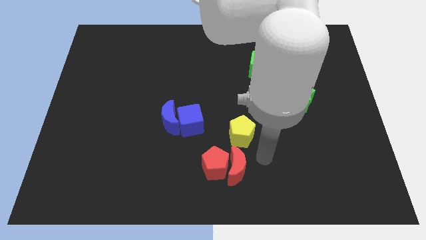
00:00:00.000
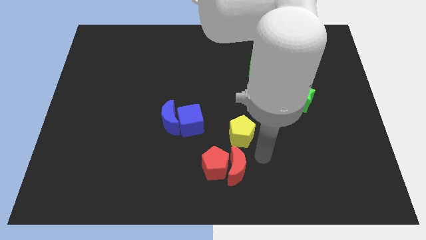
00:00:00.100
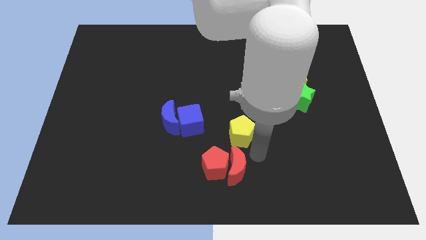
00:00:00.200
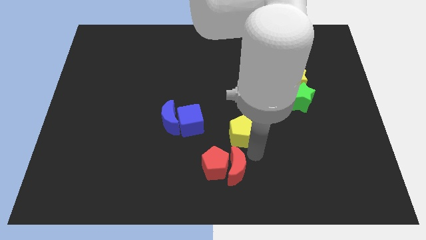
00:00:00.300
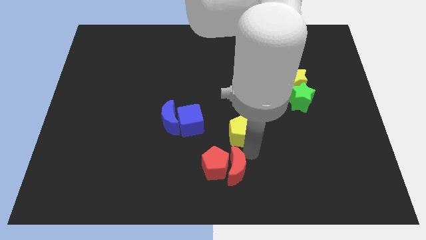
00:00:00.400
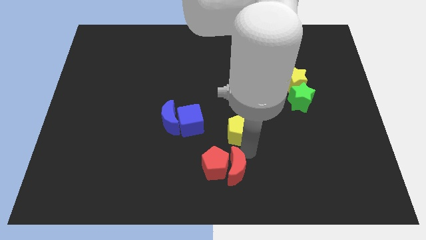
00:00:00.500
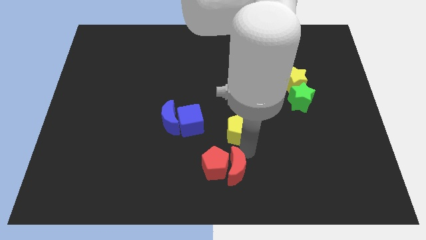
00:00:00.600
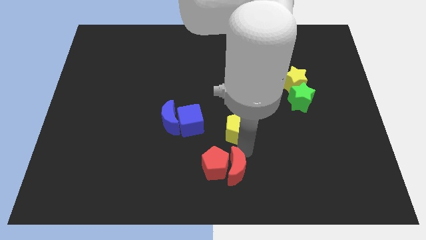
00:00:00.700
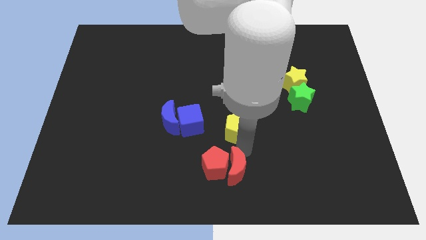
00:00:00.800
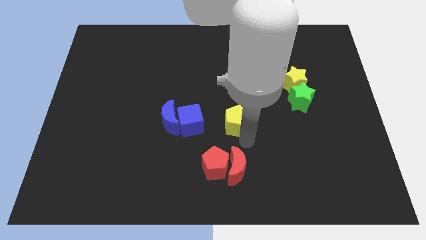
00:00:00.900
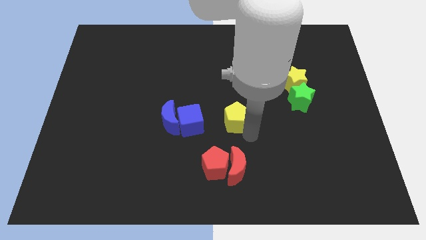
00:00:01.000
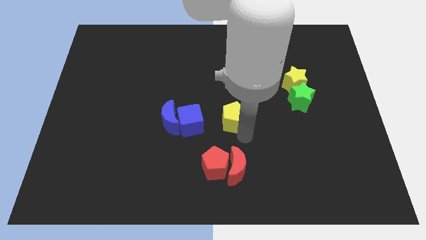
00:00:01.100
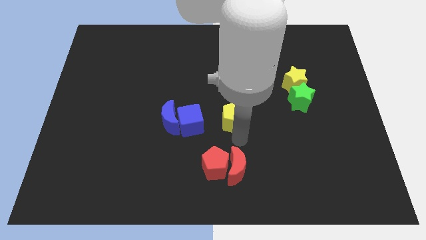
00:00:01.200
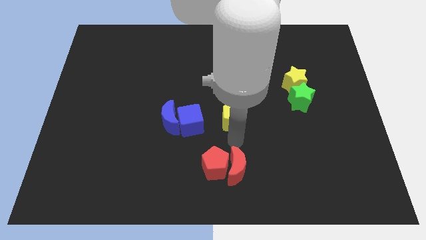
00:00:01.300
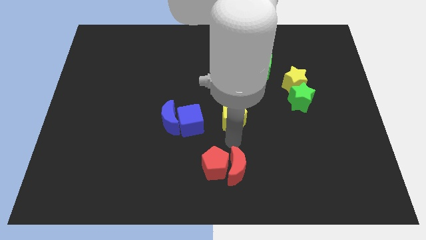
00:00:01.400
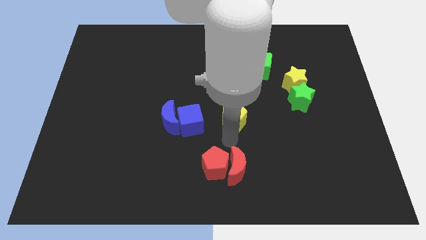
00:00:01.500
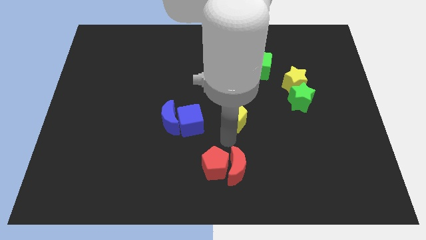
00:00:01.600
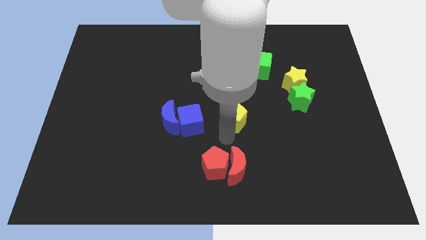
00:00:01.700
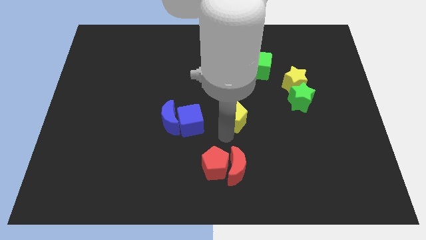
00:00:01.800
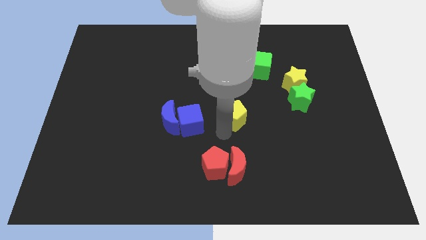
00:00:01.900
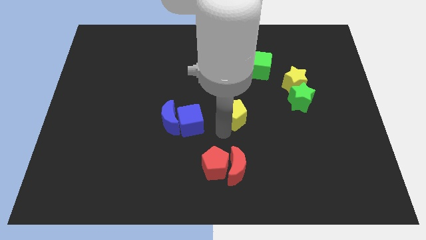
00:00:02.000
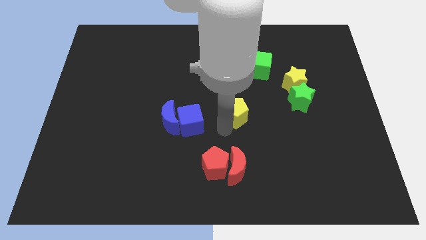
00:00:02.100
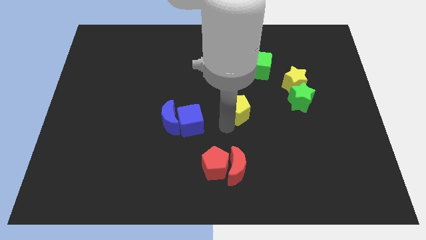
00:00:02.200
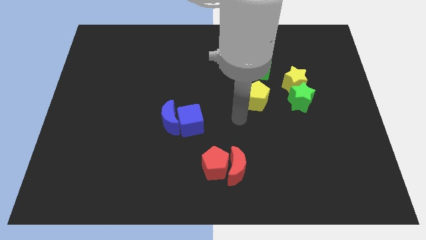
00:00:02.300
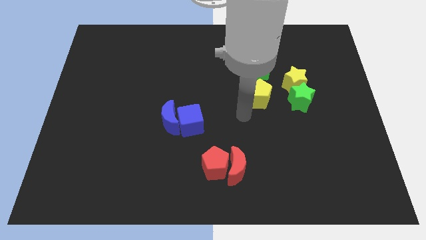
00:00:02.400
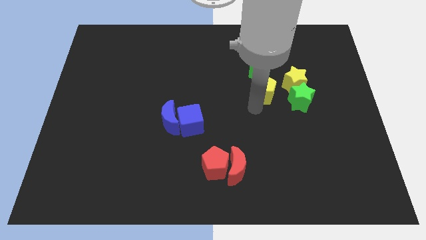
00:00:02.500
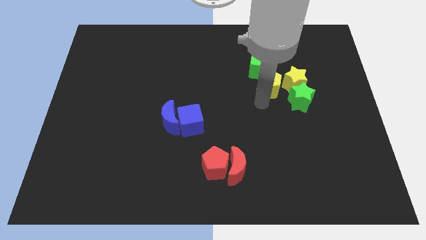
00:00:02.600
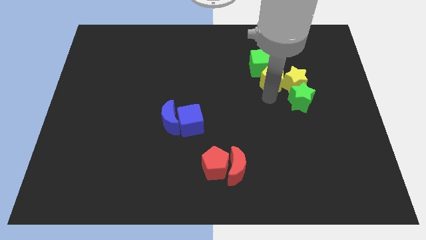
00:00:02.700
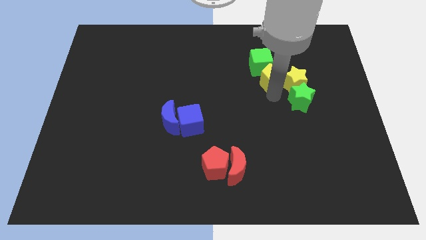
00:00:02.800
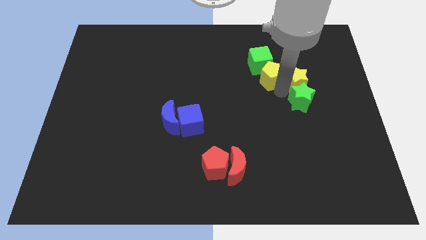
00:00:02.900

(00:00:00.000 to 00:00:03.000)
place yellow pentagon below green cube

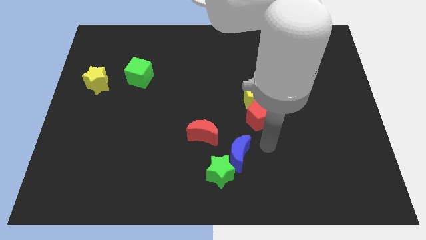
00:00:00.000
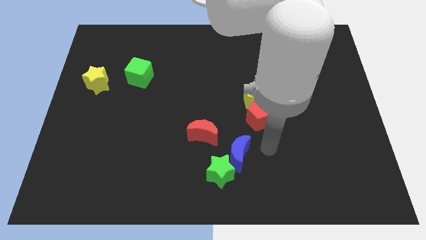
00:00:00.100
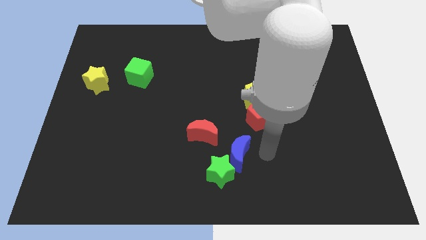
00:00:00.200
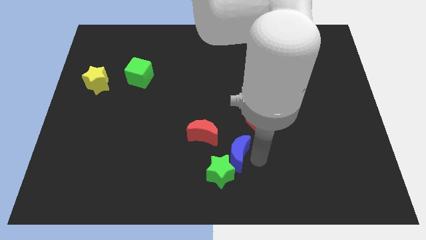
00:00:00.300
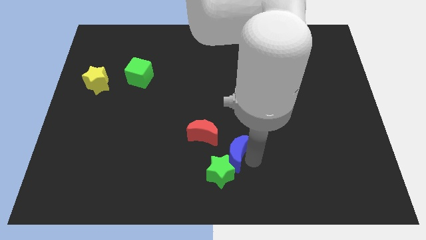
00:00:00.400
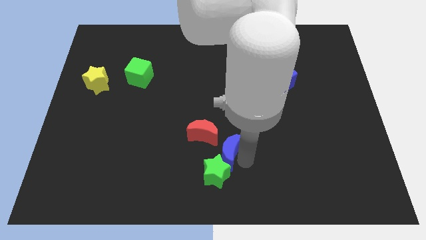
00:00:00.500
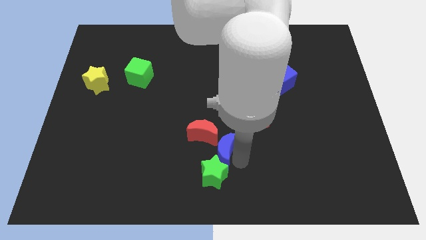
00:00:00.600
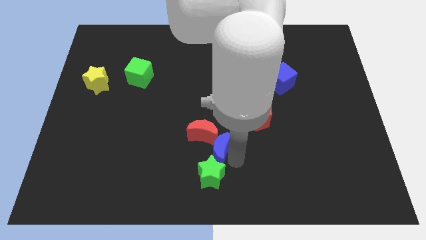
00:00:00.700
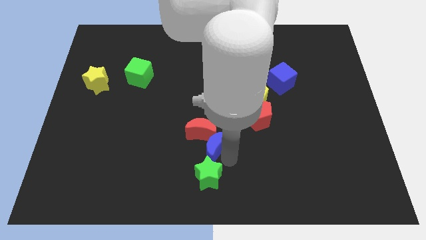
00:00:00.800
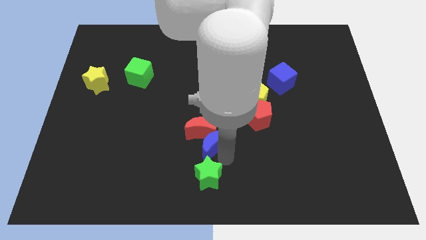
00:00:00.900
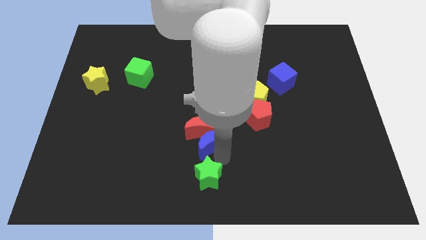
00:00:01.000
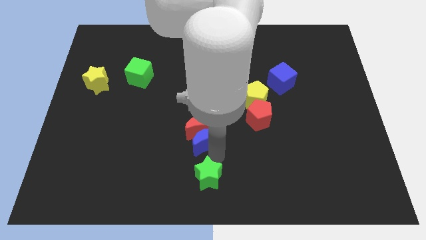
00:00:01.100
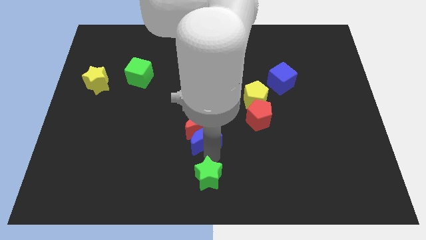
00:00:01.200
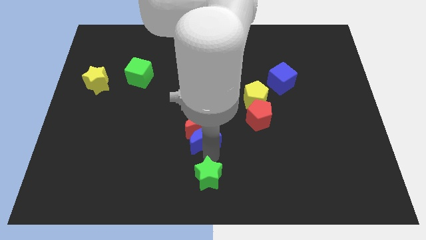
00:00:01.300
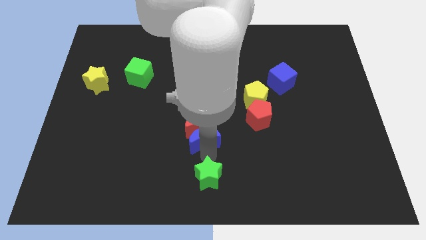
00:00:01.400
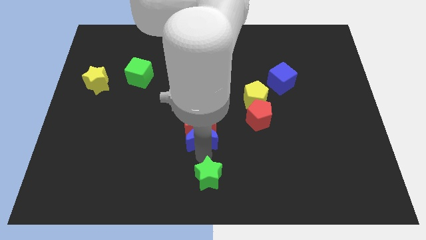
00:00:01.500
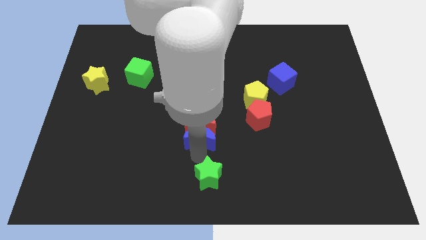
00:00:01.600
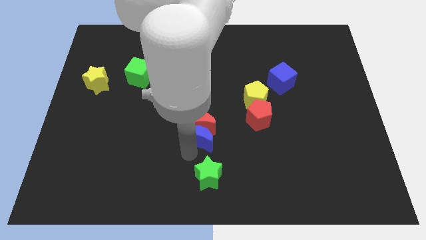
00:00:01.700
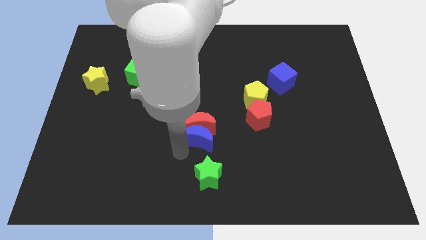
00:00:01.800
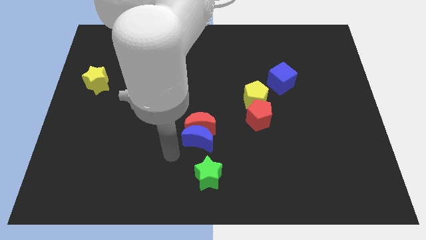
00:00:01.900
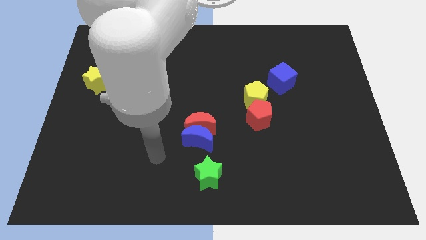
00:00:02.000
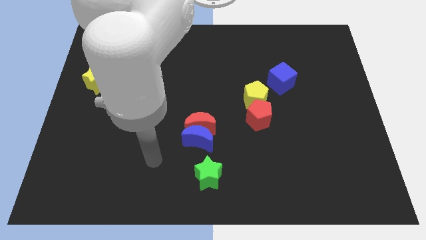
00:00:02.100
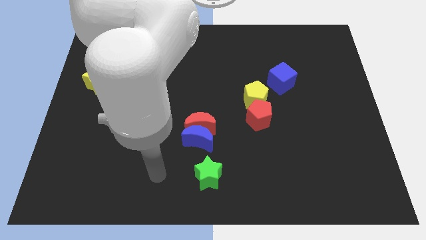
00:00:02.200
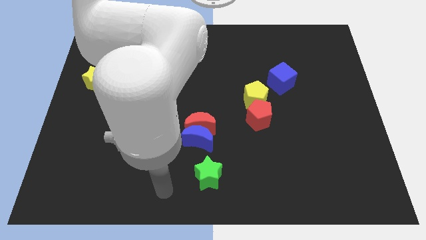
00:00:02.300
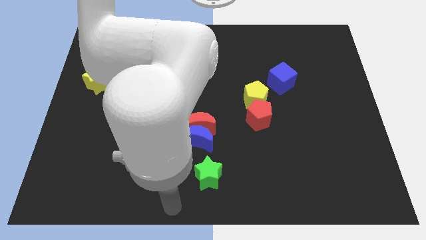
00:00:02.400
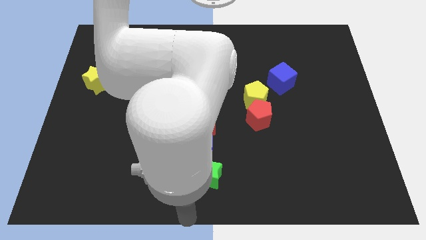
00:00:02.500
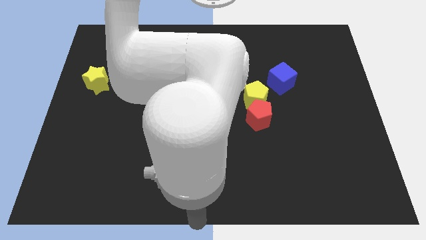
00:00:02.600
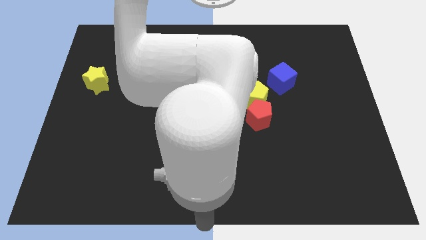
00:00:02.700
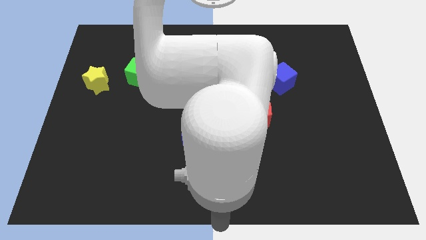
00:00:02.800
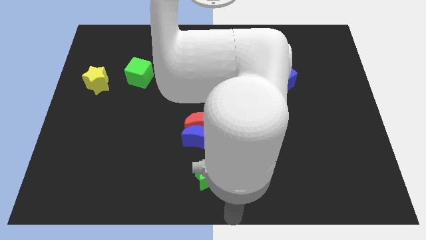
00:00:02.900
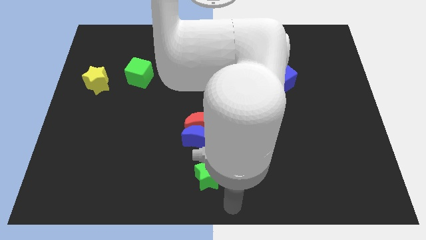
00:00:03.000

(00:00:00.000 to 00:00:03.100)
place the blue moon vertically below the red moon

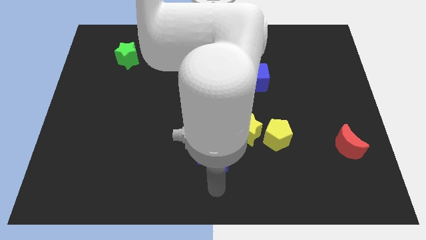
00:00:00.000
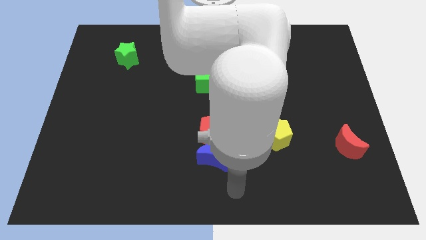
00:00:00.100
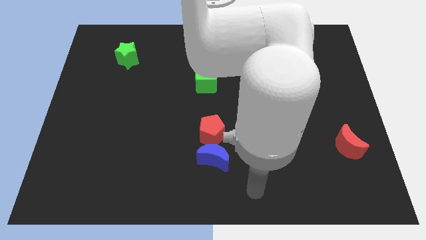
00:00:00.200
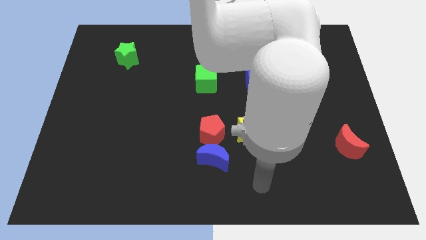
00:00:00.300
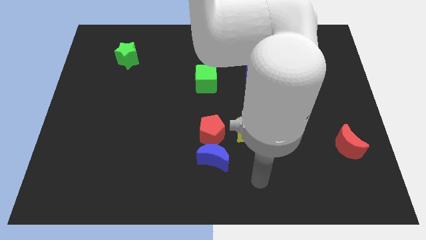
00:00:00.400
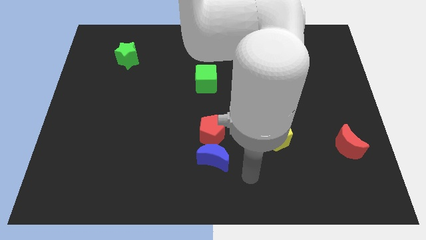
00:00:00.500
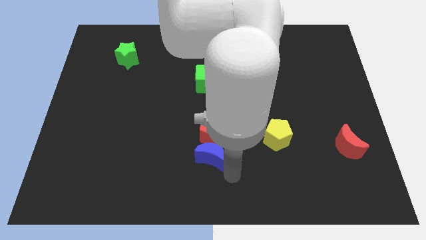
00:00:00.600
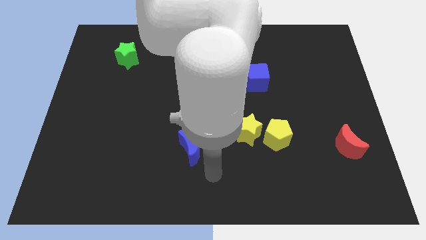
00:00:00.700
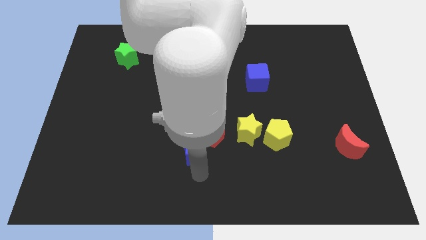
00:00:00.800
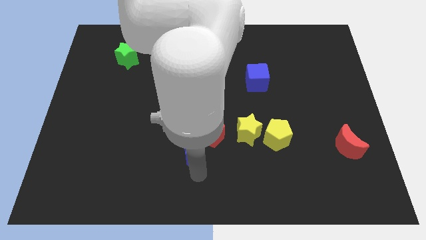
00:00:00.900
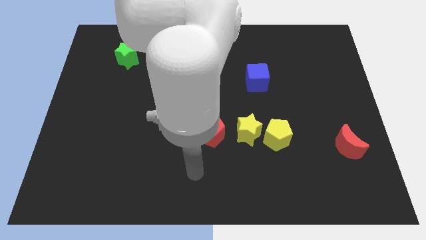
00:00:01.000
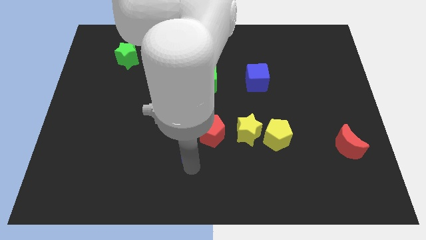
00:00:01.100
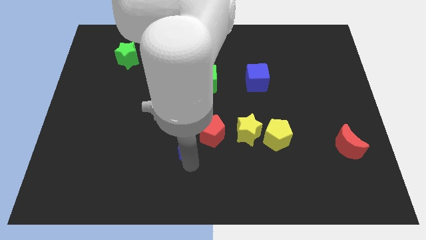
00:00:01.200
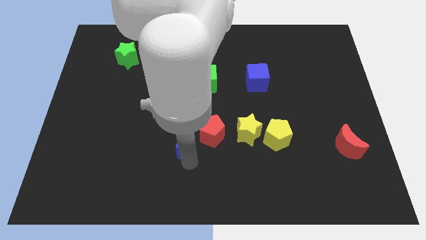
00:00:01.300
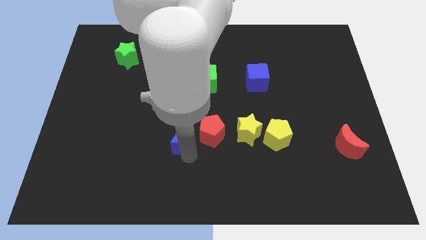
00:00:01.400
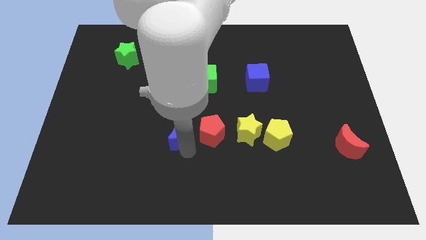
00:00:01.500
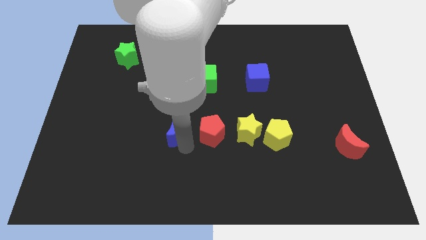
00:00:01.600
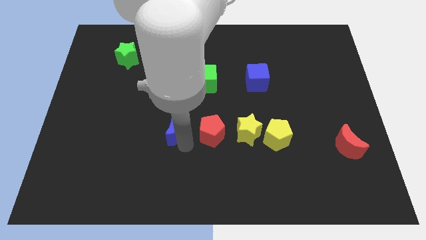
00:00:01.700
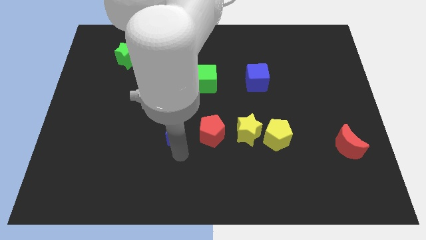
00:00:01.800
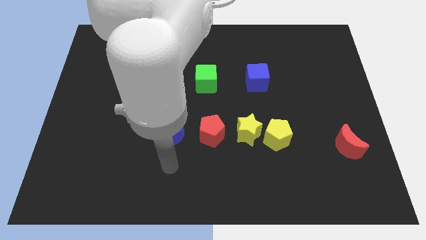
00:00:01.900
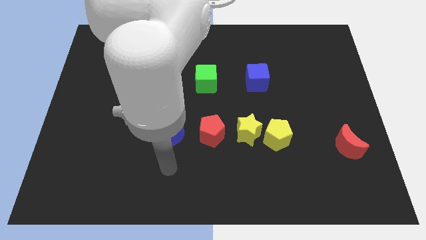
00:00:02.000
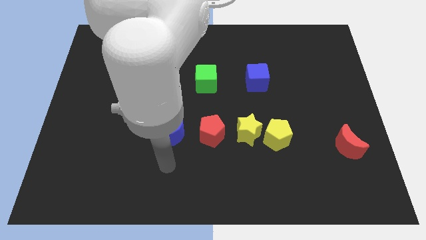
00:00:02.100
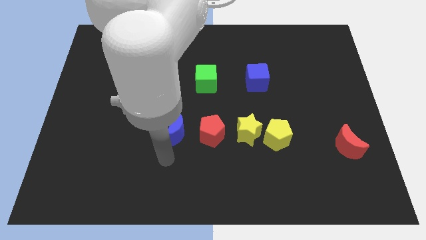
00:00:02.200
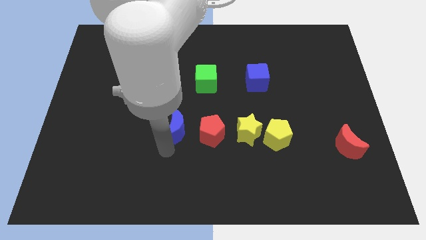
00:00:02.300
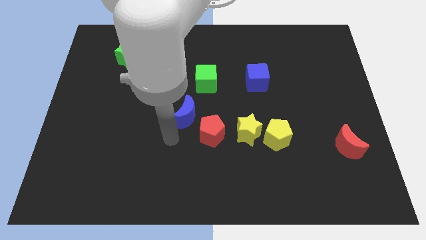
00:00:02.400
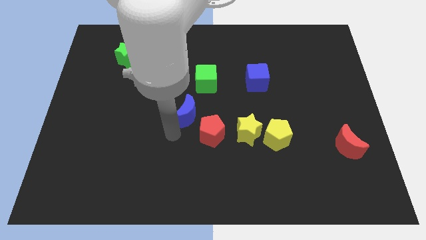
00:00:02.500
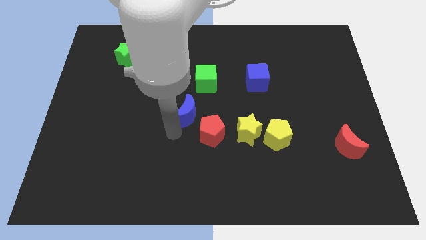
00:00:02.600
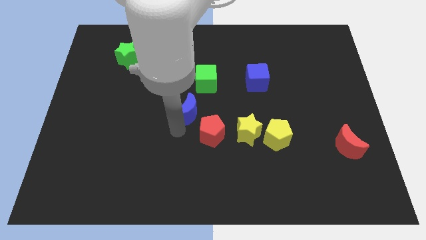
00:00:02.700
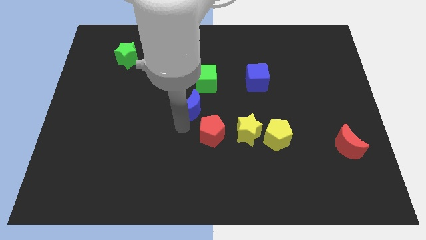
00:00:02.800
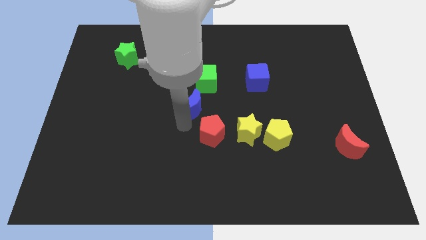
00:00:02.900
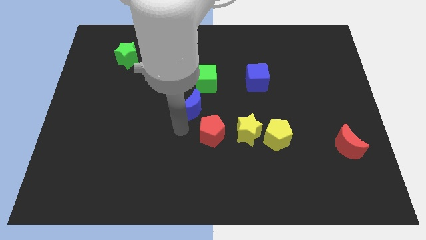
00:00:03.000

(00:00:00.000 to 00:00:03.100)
move the blue moon towards the bottom side of the green cube
